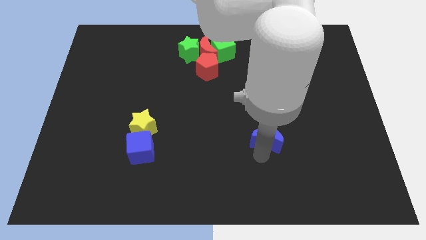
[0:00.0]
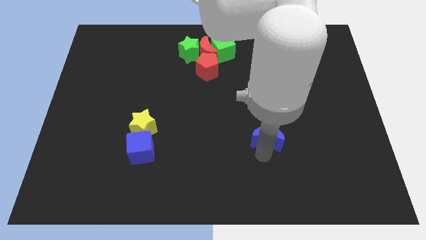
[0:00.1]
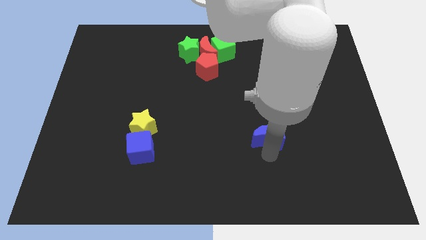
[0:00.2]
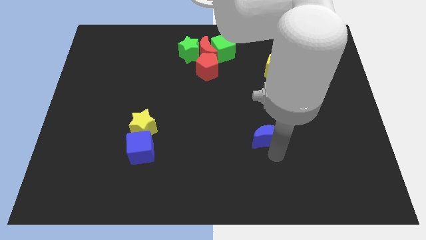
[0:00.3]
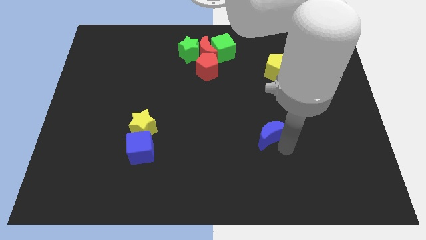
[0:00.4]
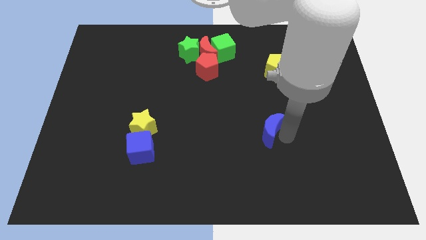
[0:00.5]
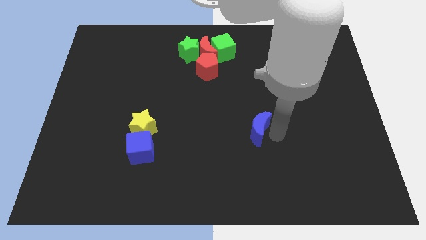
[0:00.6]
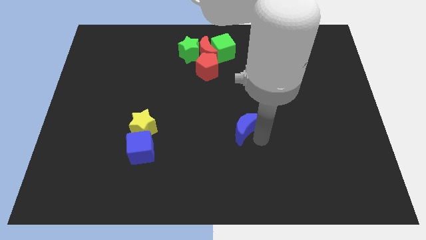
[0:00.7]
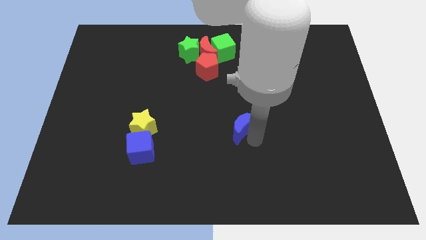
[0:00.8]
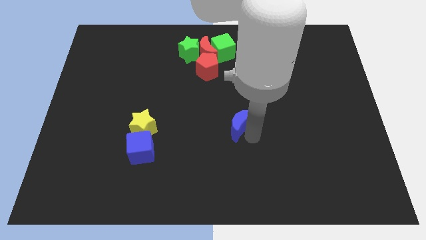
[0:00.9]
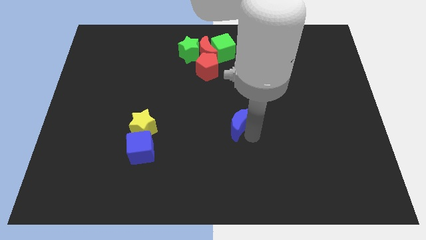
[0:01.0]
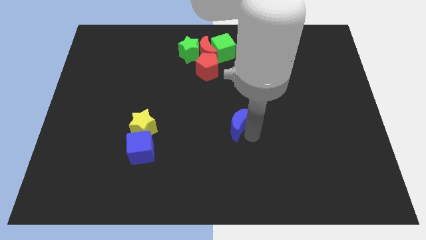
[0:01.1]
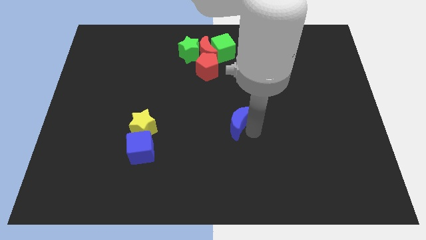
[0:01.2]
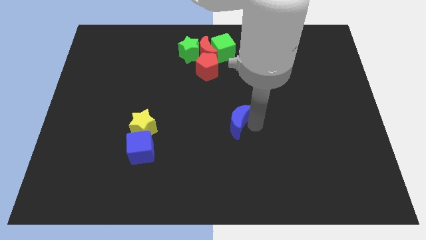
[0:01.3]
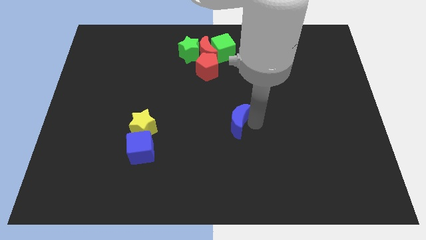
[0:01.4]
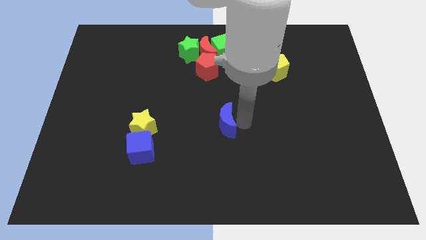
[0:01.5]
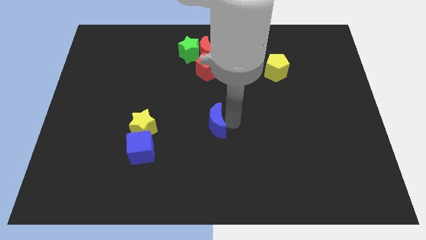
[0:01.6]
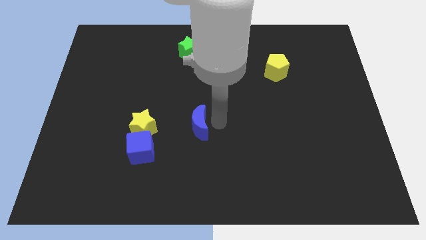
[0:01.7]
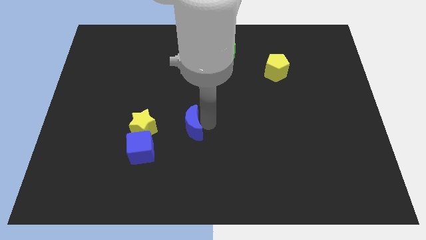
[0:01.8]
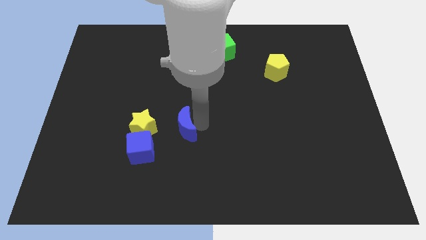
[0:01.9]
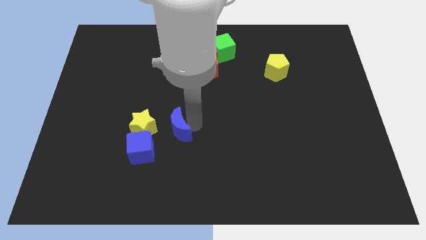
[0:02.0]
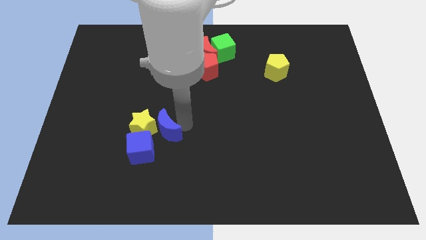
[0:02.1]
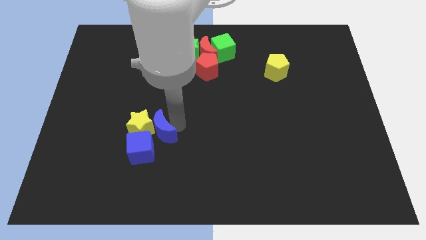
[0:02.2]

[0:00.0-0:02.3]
move the blue crescent to the right of the yellow star

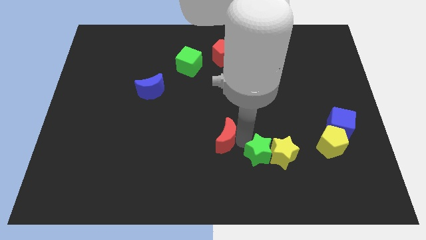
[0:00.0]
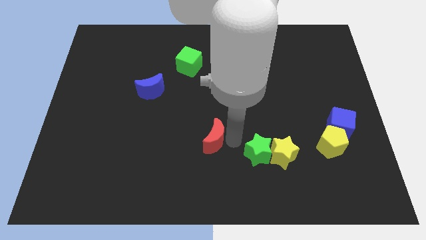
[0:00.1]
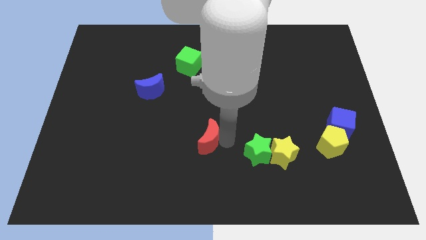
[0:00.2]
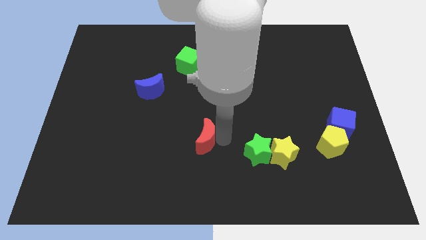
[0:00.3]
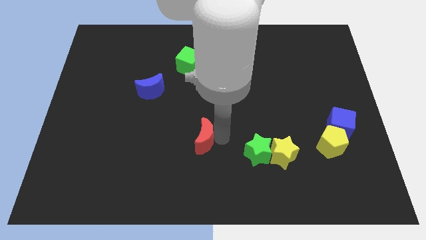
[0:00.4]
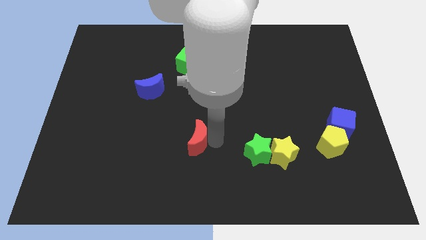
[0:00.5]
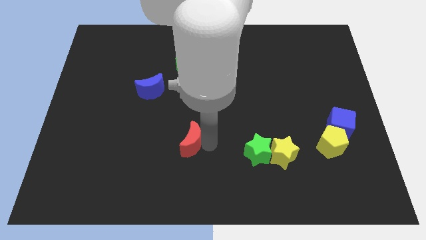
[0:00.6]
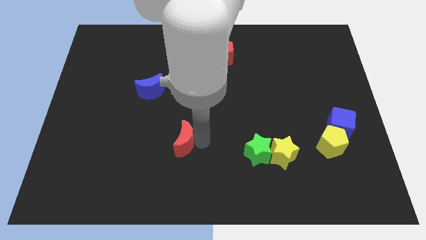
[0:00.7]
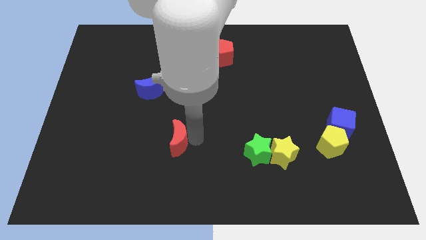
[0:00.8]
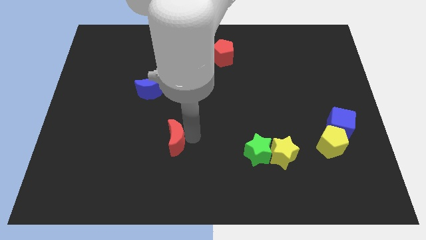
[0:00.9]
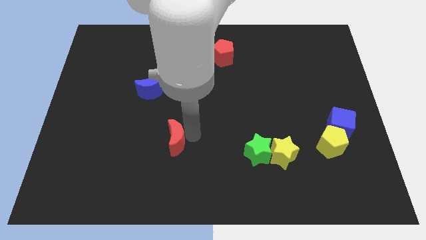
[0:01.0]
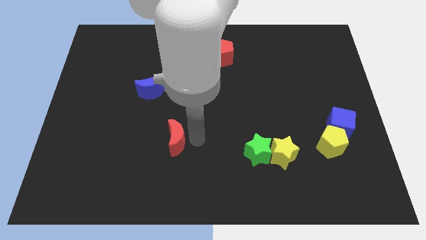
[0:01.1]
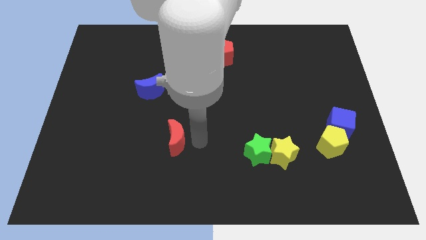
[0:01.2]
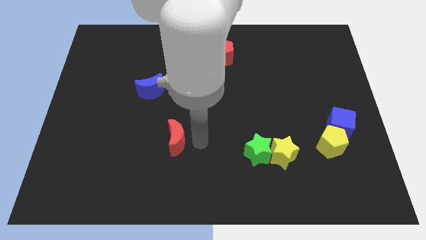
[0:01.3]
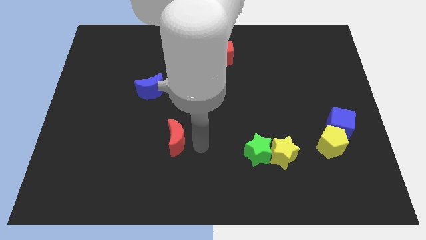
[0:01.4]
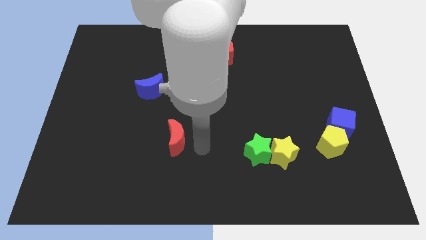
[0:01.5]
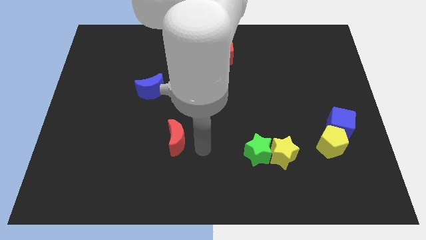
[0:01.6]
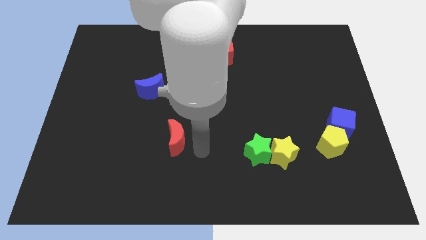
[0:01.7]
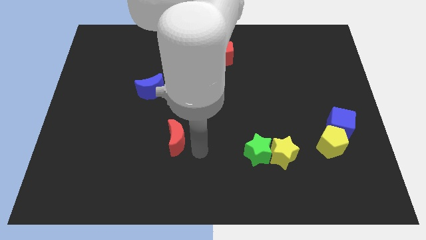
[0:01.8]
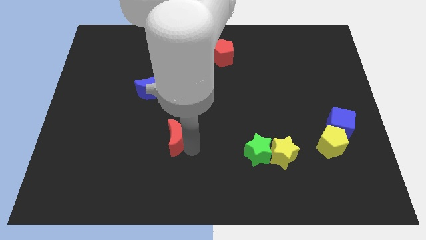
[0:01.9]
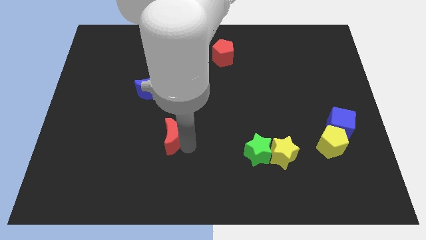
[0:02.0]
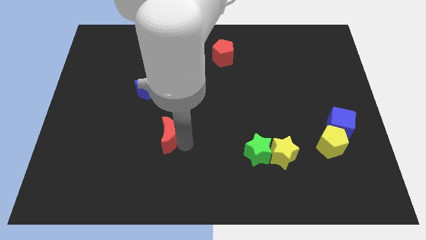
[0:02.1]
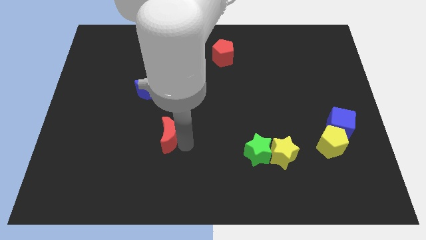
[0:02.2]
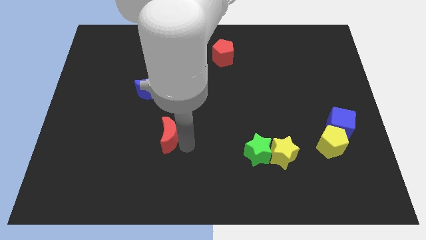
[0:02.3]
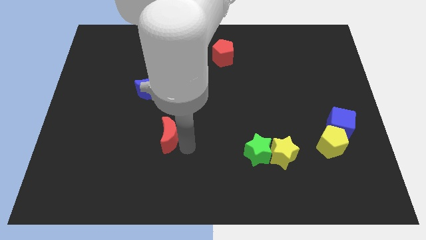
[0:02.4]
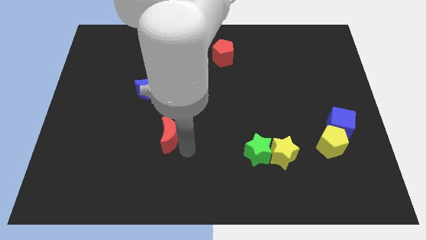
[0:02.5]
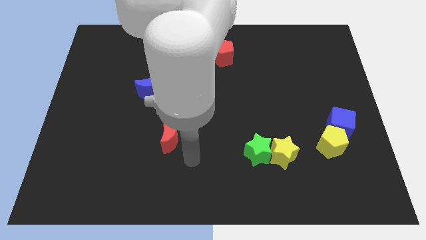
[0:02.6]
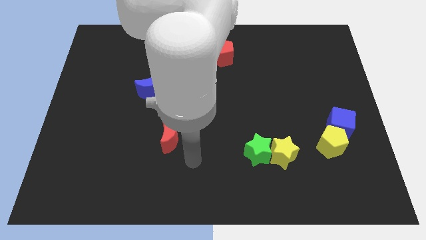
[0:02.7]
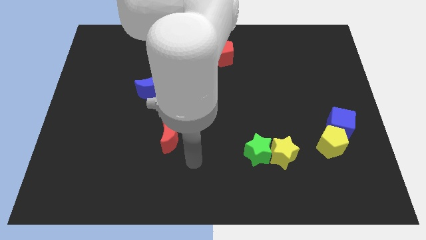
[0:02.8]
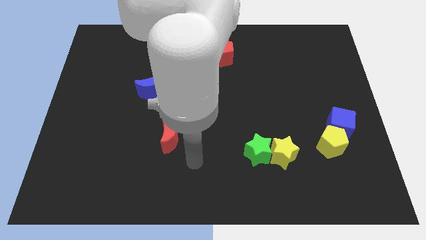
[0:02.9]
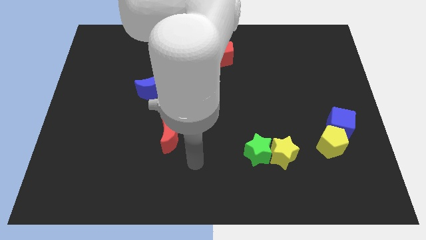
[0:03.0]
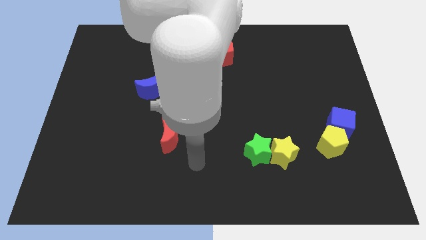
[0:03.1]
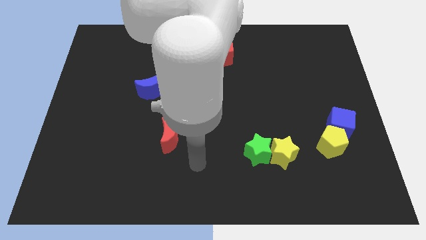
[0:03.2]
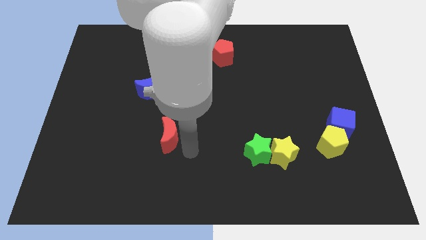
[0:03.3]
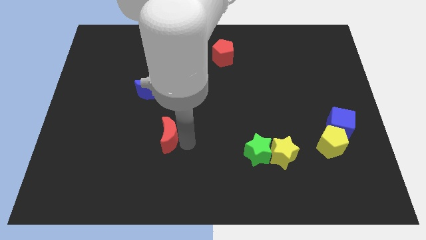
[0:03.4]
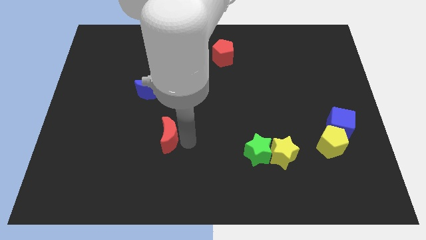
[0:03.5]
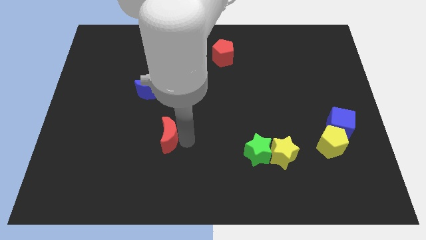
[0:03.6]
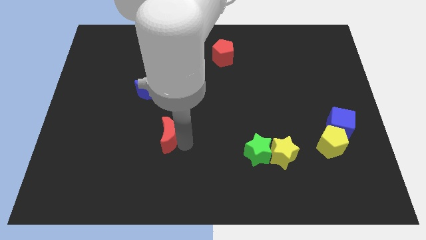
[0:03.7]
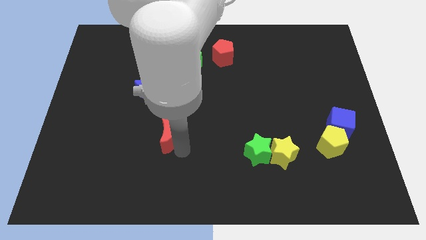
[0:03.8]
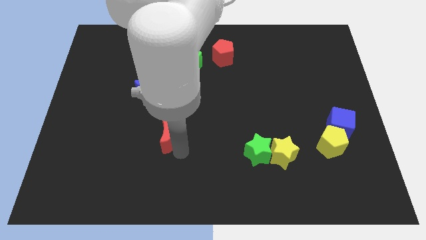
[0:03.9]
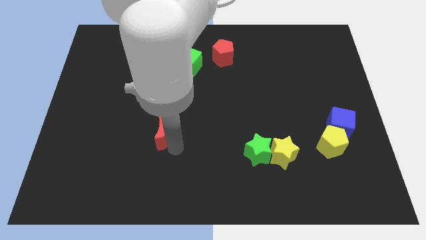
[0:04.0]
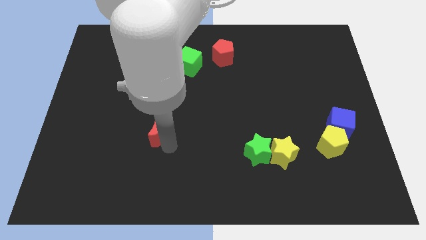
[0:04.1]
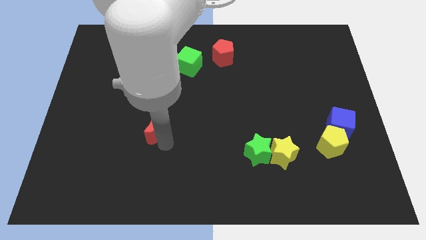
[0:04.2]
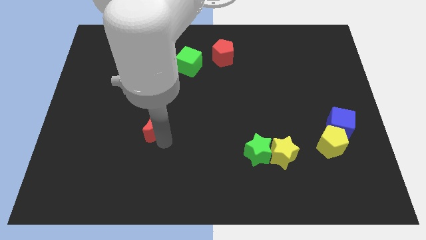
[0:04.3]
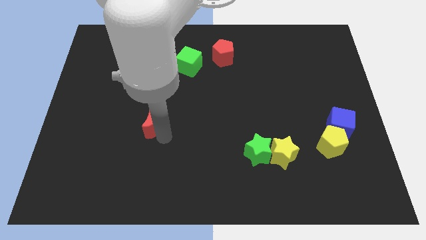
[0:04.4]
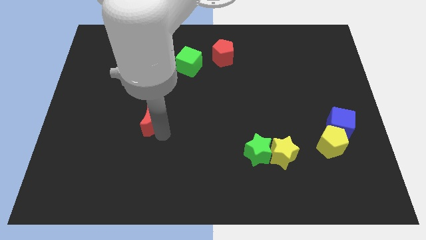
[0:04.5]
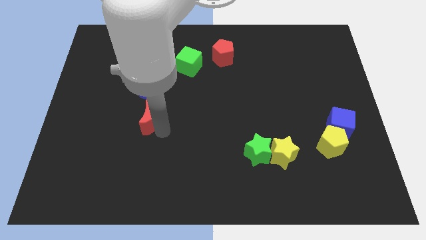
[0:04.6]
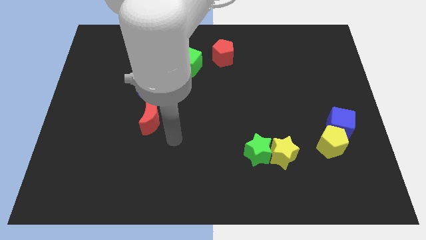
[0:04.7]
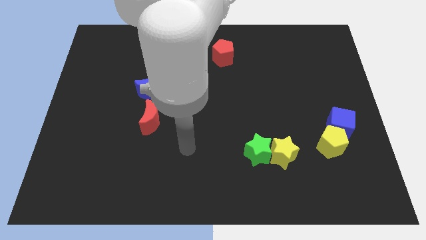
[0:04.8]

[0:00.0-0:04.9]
place the red moon below the blue moon

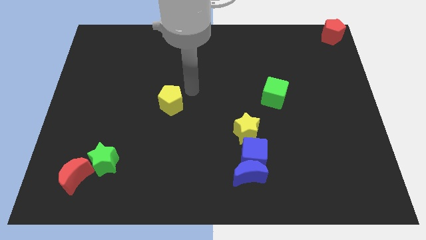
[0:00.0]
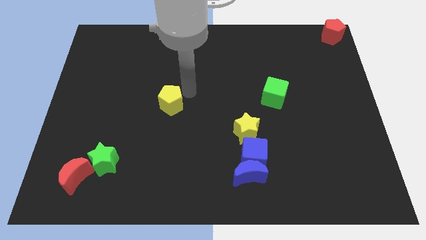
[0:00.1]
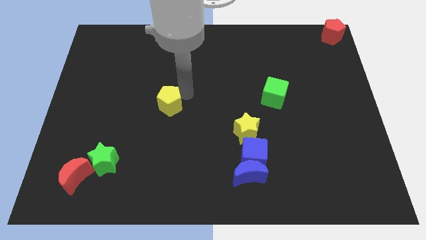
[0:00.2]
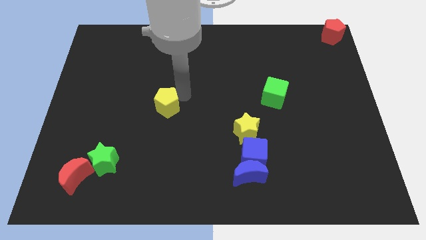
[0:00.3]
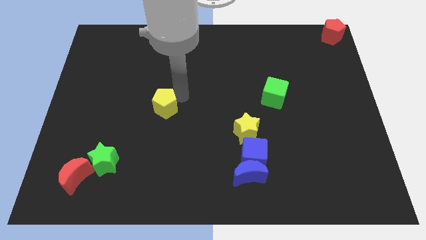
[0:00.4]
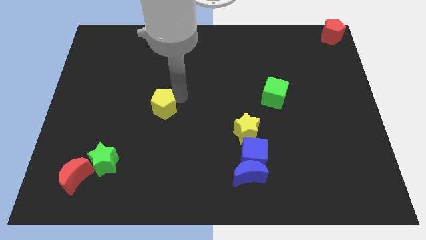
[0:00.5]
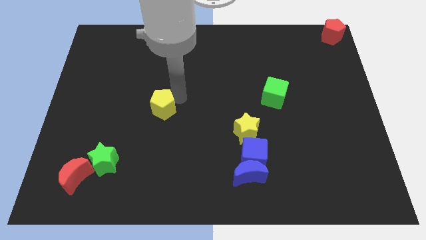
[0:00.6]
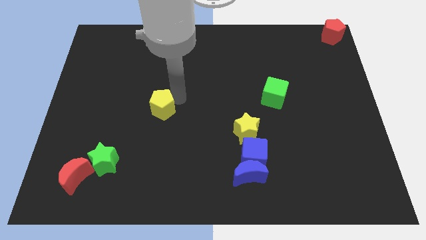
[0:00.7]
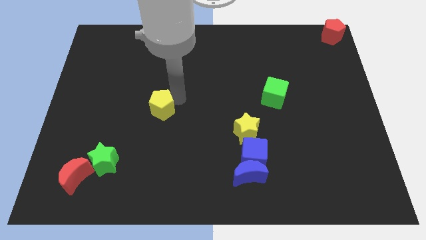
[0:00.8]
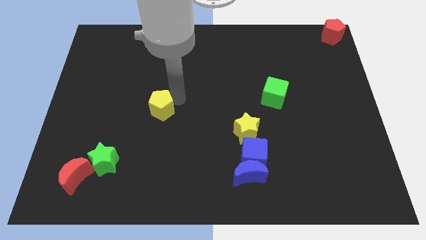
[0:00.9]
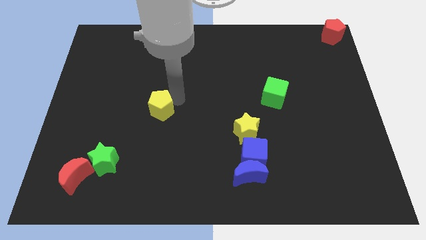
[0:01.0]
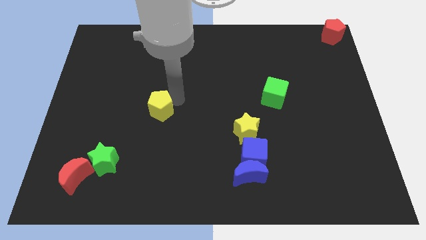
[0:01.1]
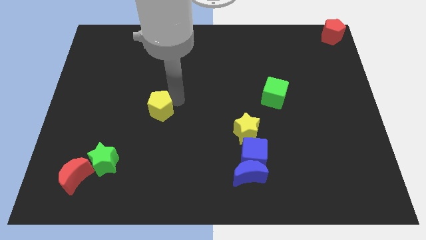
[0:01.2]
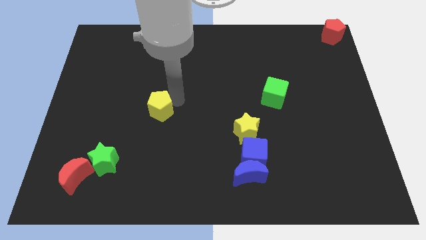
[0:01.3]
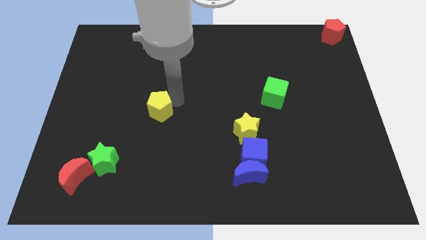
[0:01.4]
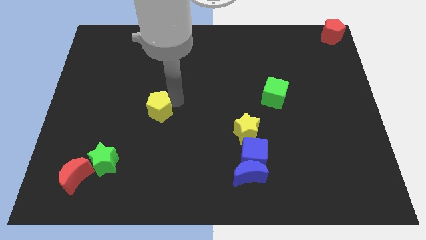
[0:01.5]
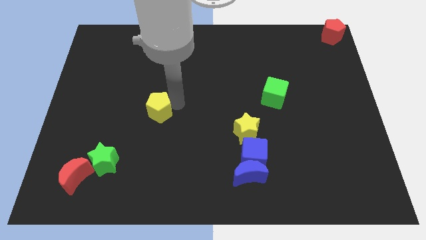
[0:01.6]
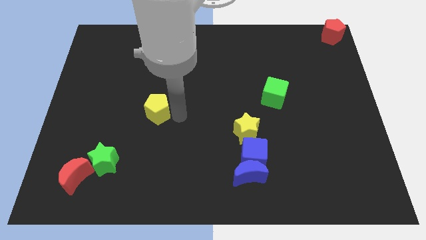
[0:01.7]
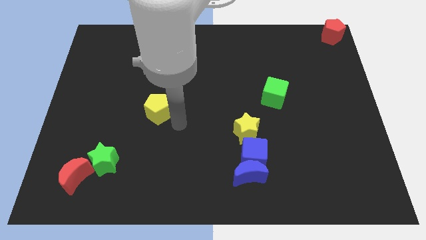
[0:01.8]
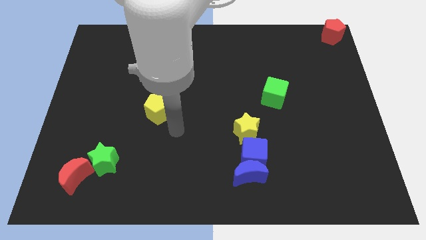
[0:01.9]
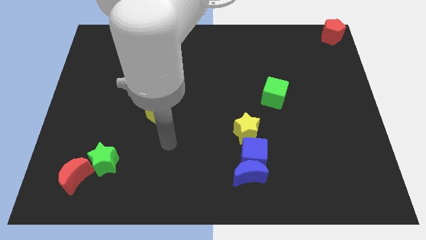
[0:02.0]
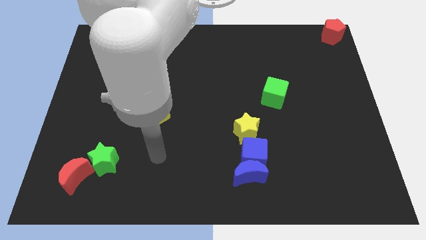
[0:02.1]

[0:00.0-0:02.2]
slightly move the yellow pentagon to the bottom of the board
